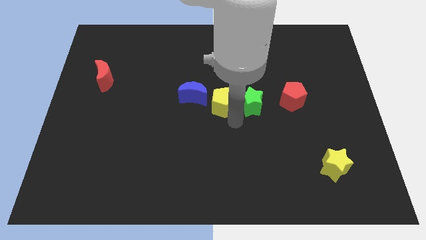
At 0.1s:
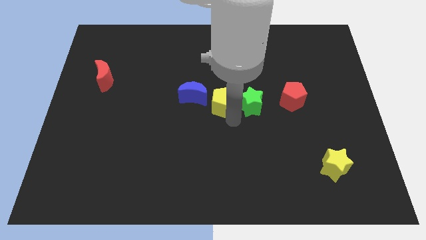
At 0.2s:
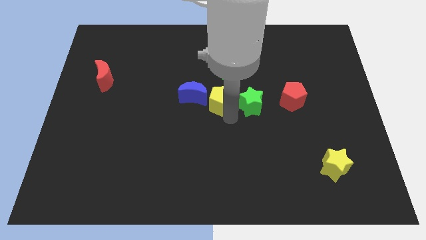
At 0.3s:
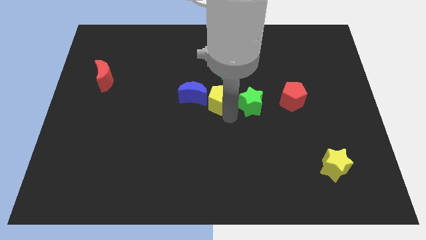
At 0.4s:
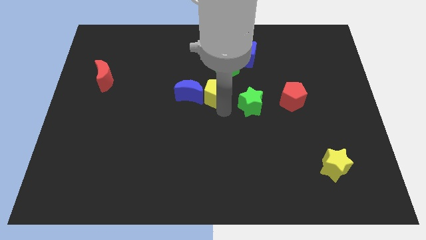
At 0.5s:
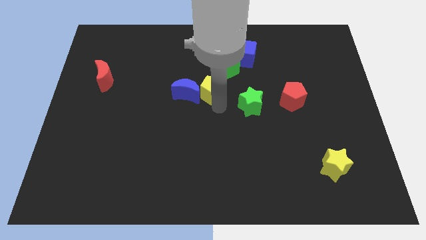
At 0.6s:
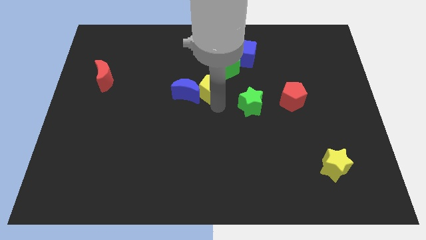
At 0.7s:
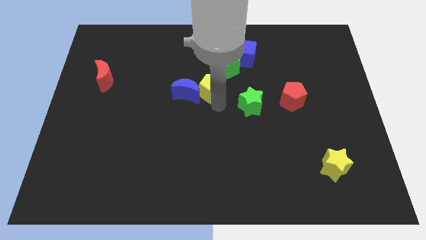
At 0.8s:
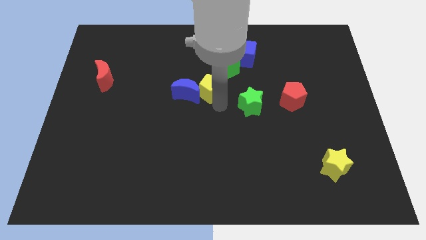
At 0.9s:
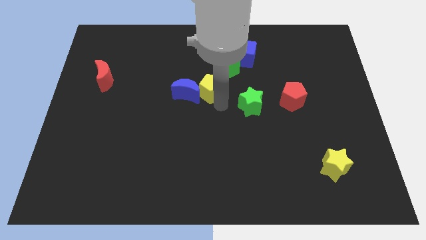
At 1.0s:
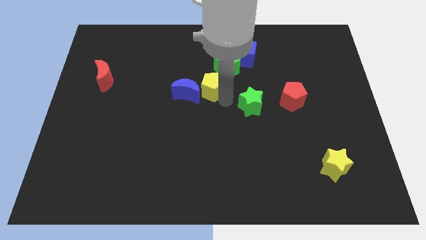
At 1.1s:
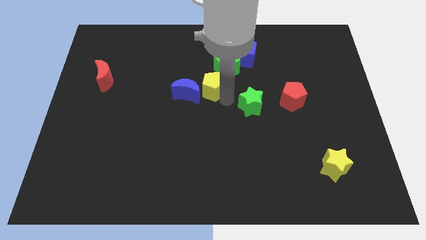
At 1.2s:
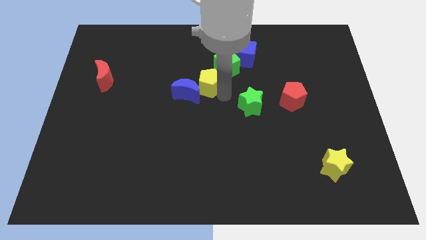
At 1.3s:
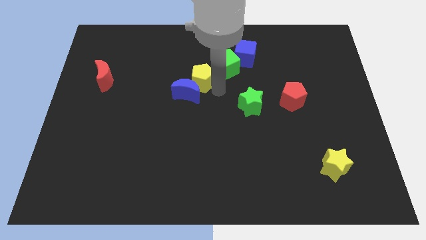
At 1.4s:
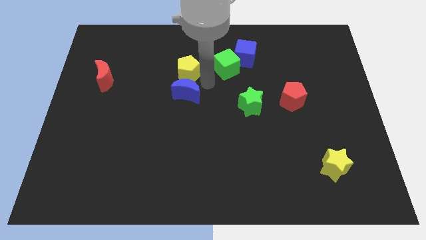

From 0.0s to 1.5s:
put the yellow pentagon vertically above the blue moon

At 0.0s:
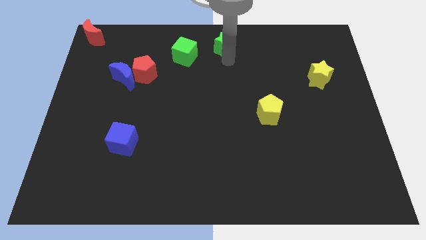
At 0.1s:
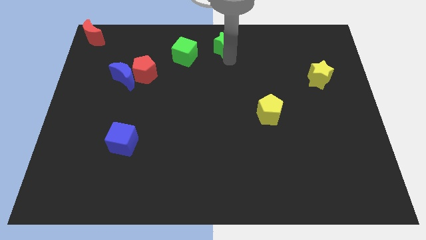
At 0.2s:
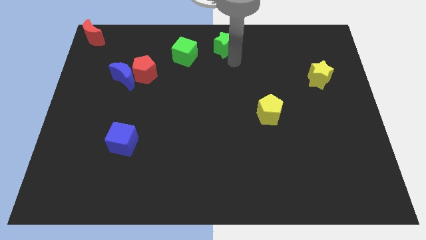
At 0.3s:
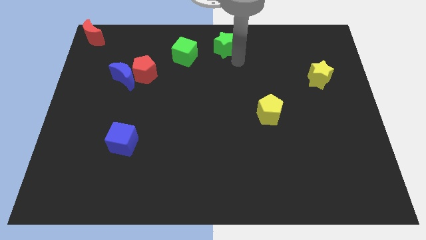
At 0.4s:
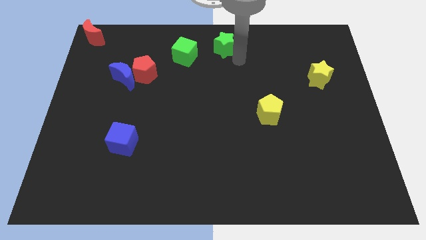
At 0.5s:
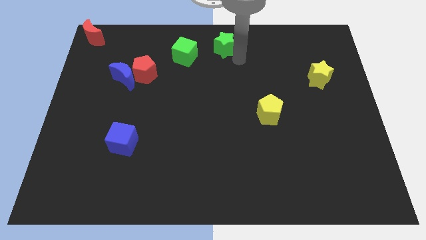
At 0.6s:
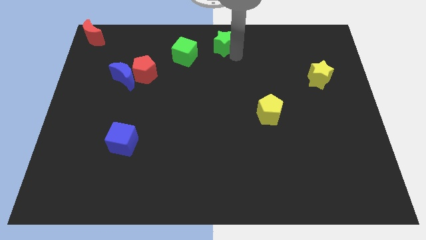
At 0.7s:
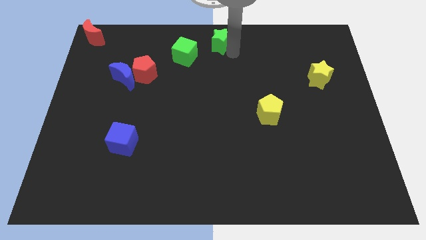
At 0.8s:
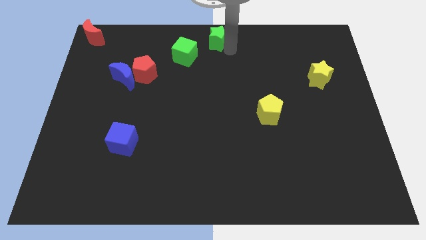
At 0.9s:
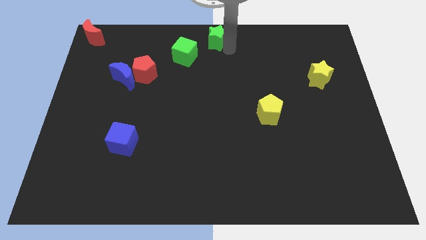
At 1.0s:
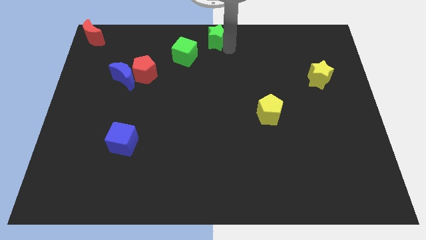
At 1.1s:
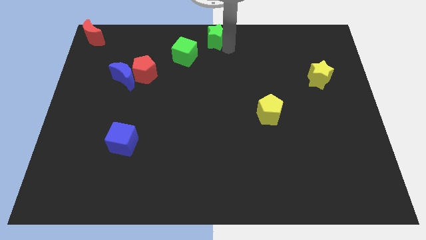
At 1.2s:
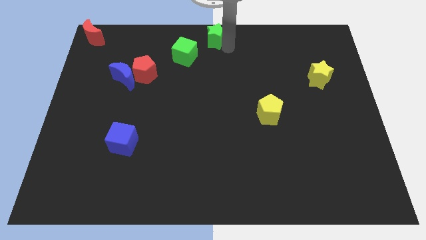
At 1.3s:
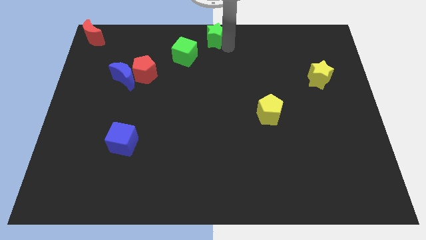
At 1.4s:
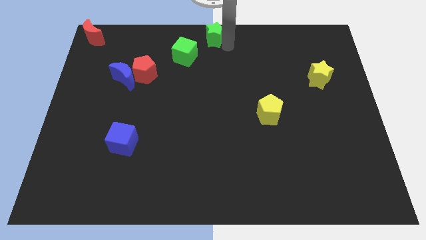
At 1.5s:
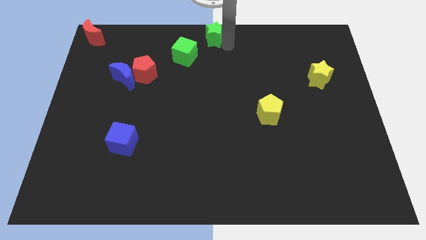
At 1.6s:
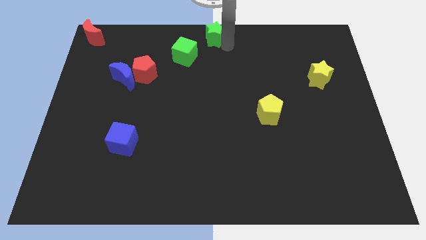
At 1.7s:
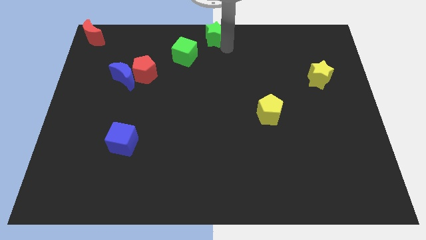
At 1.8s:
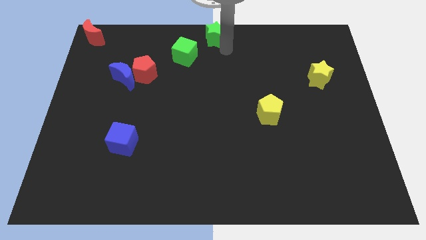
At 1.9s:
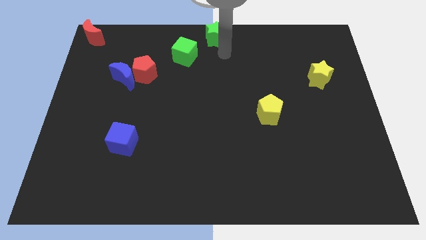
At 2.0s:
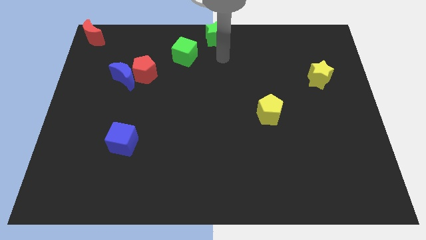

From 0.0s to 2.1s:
place the green star at the top center

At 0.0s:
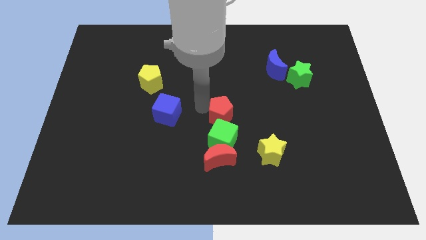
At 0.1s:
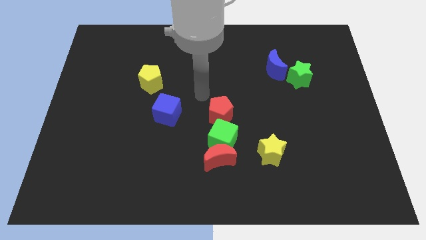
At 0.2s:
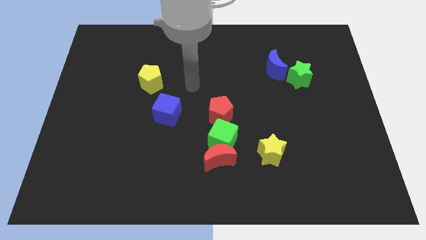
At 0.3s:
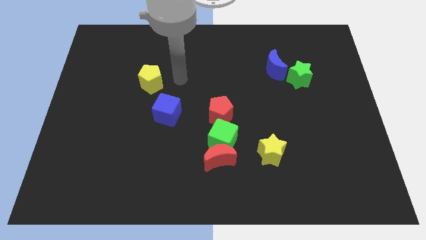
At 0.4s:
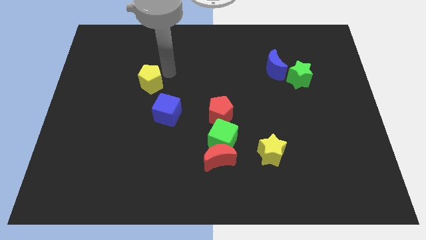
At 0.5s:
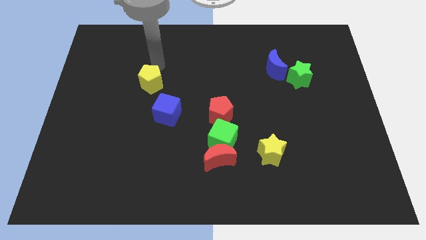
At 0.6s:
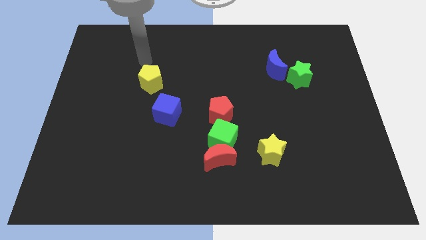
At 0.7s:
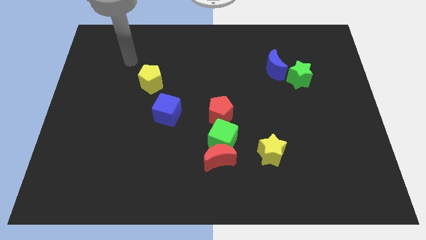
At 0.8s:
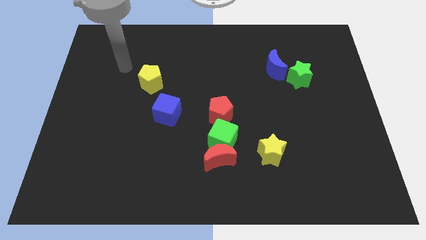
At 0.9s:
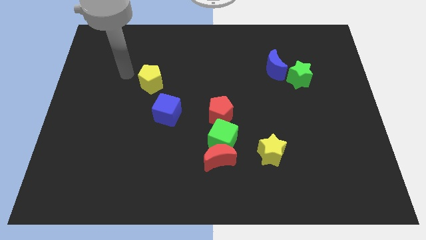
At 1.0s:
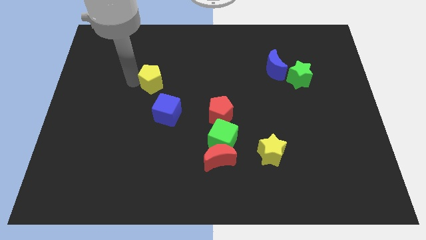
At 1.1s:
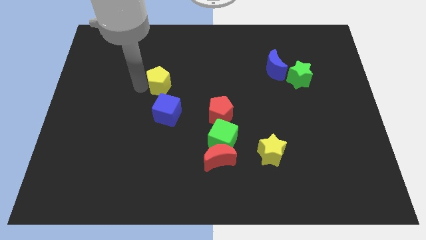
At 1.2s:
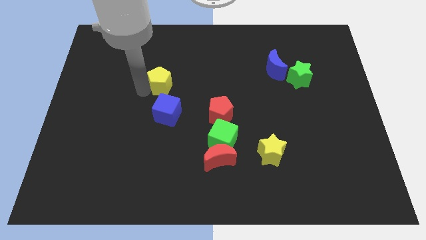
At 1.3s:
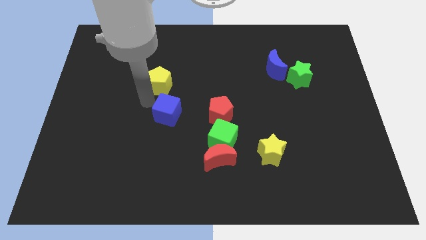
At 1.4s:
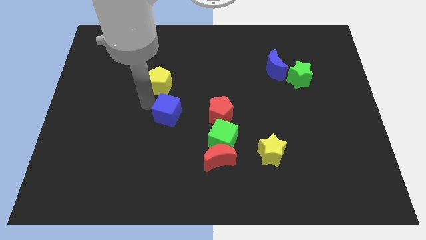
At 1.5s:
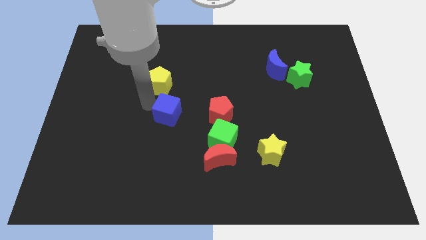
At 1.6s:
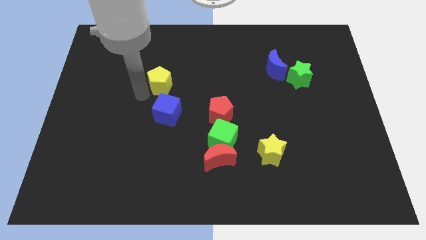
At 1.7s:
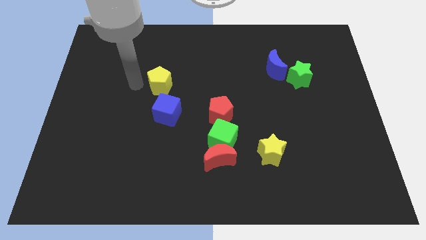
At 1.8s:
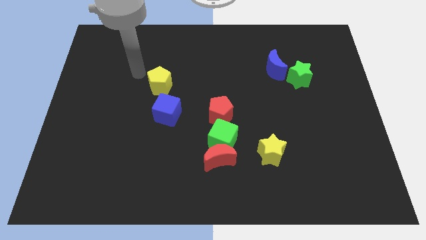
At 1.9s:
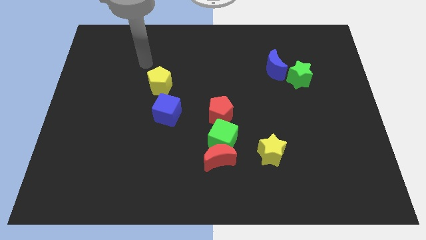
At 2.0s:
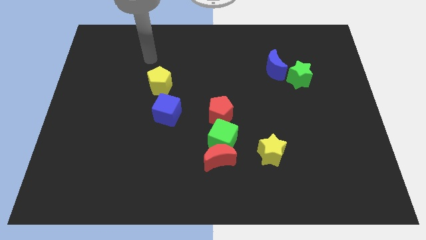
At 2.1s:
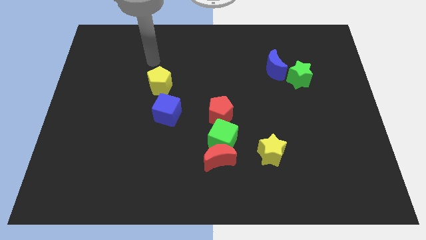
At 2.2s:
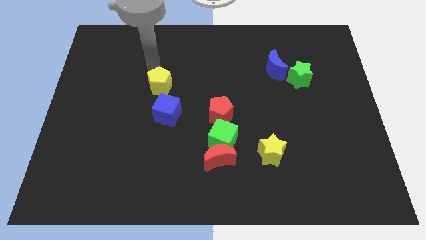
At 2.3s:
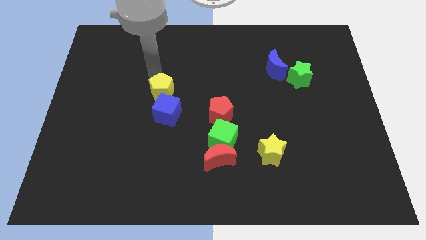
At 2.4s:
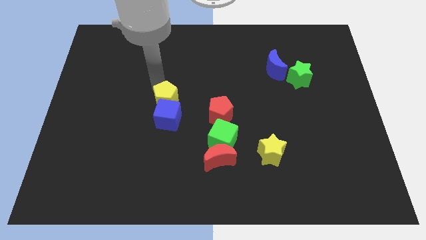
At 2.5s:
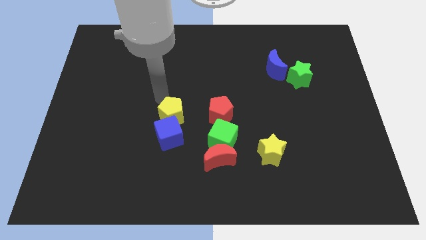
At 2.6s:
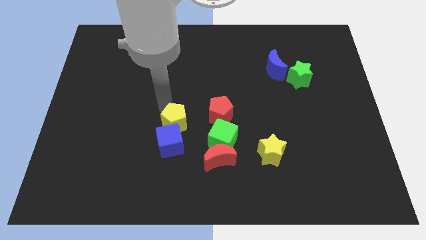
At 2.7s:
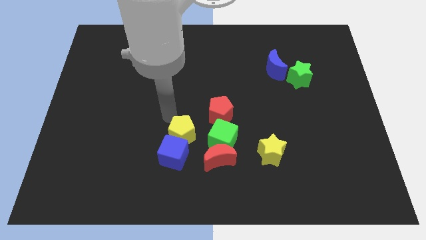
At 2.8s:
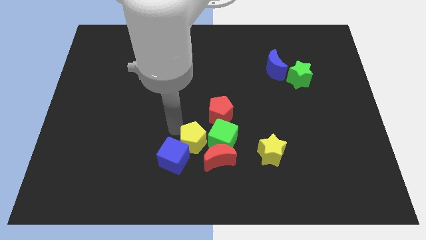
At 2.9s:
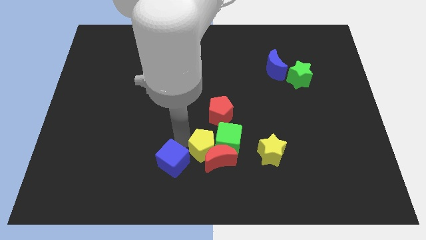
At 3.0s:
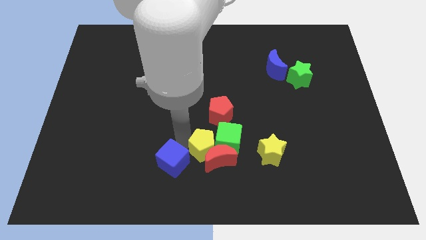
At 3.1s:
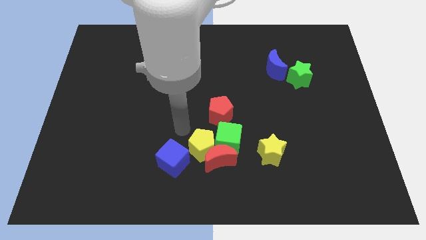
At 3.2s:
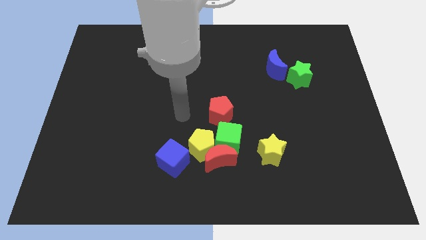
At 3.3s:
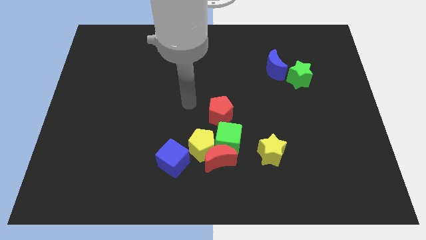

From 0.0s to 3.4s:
place the yellow pentagon in between the green cube and blue cube

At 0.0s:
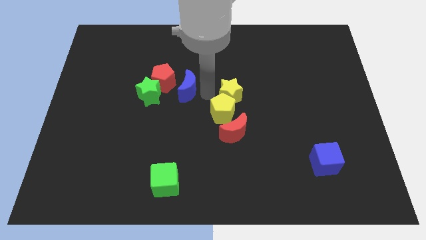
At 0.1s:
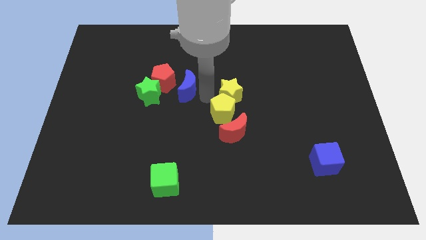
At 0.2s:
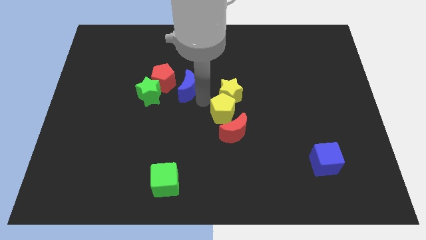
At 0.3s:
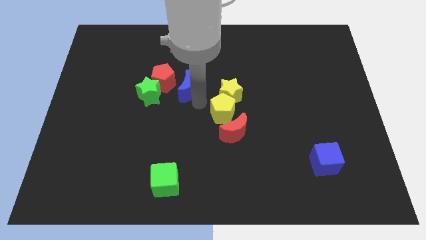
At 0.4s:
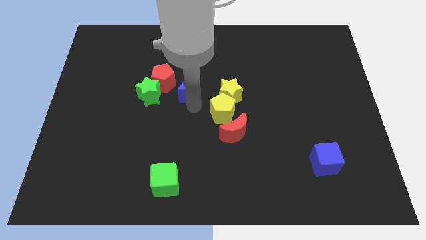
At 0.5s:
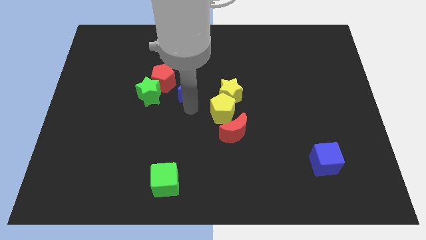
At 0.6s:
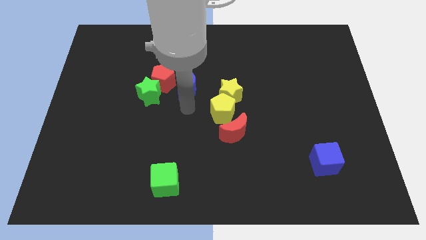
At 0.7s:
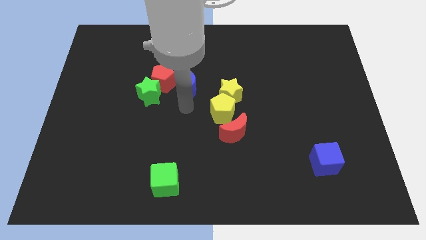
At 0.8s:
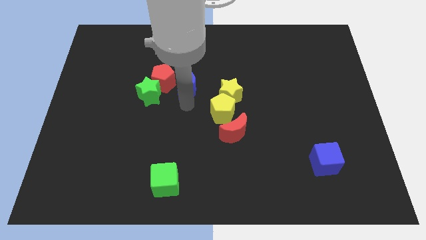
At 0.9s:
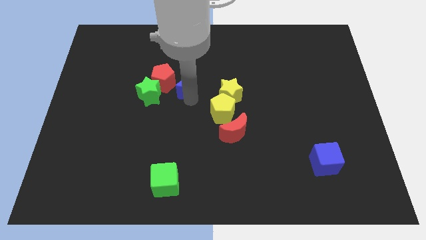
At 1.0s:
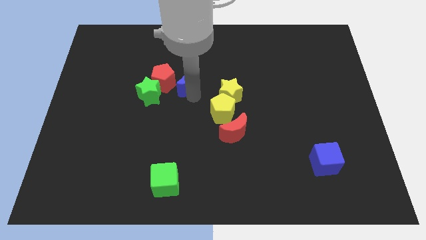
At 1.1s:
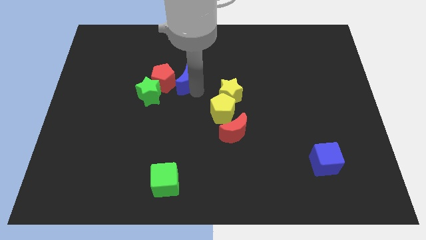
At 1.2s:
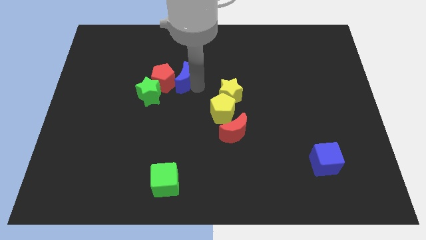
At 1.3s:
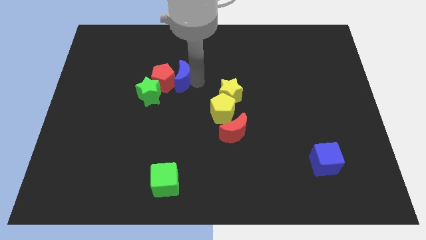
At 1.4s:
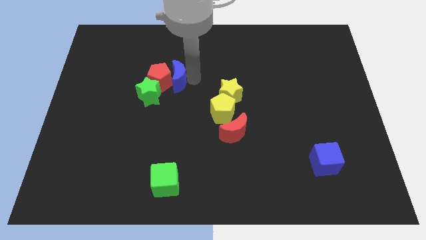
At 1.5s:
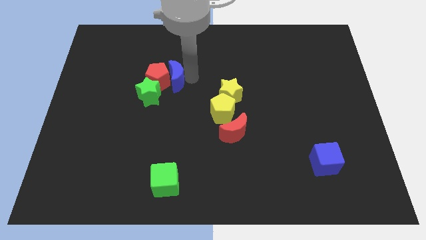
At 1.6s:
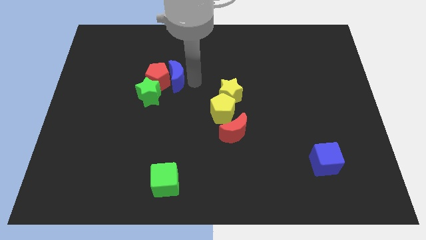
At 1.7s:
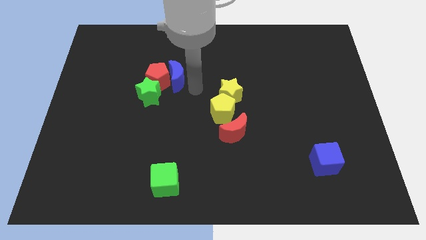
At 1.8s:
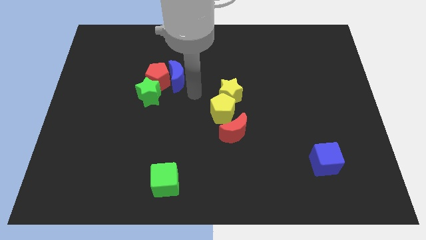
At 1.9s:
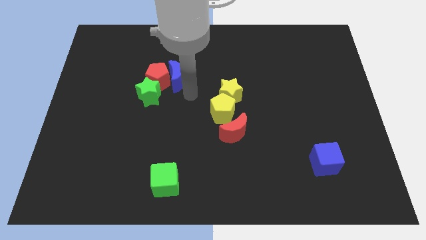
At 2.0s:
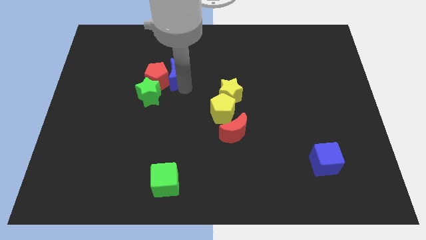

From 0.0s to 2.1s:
push the blue crescent into the red pentagon

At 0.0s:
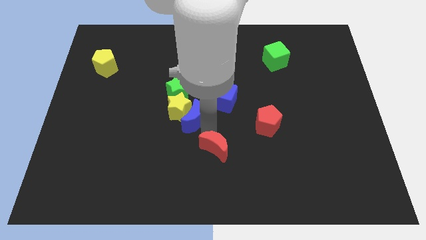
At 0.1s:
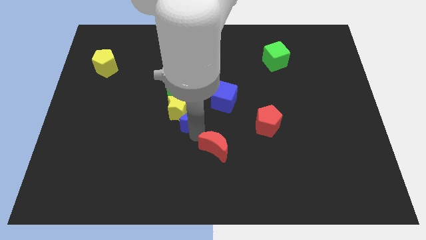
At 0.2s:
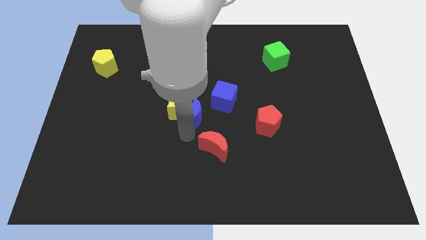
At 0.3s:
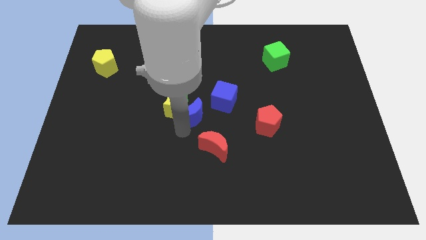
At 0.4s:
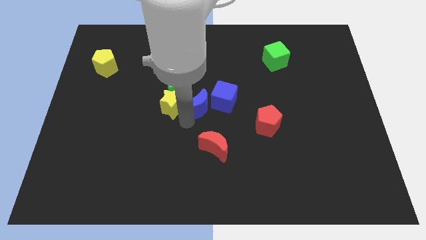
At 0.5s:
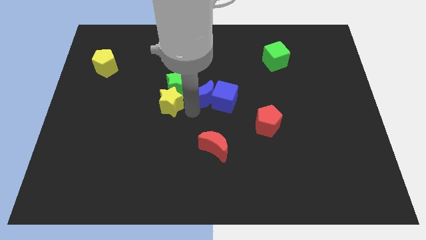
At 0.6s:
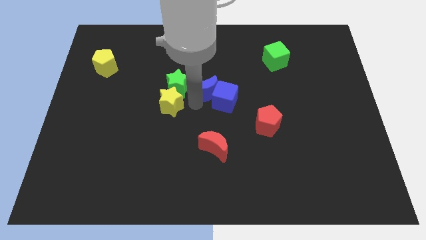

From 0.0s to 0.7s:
place the blue moon in between the blue cube and green star
